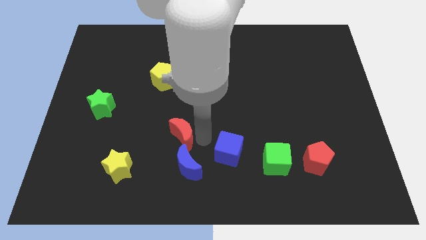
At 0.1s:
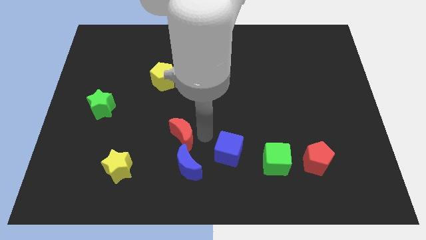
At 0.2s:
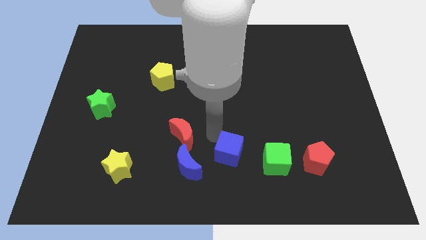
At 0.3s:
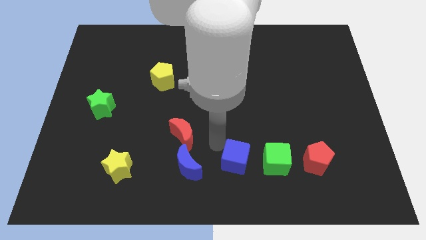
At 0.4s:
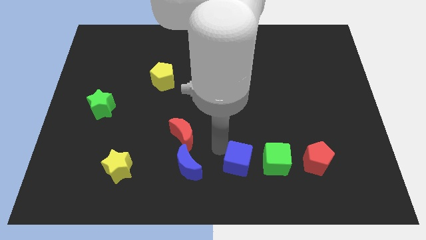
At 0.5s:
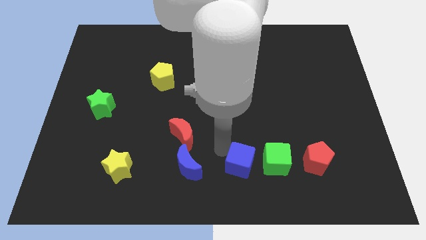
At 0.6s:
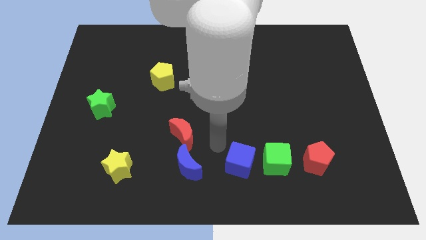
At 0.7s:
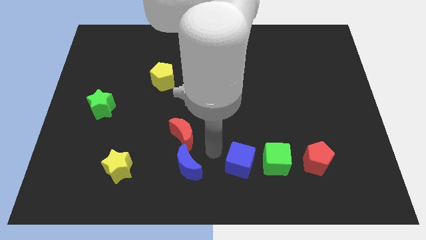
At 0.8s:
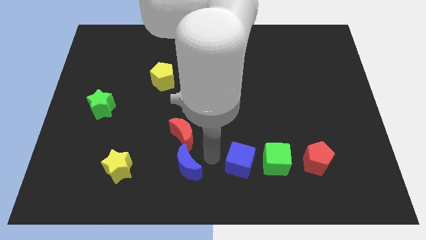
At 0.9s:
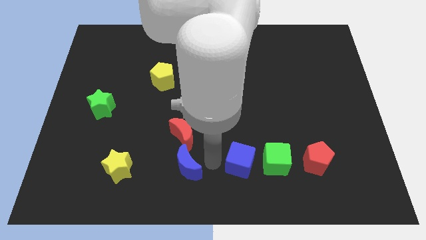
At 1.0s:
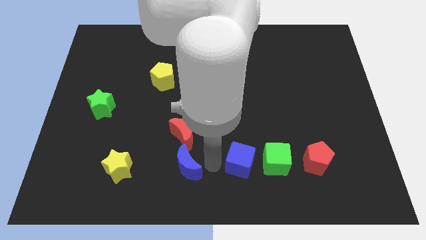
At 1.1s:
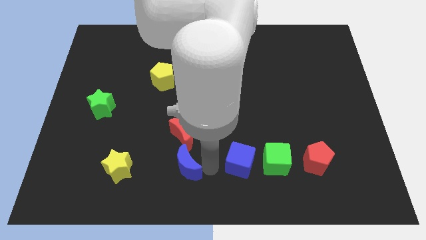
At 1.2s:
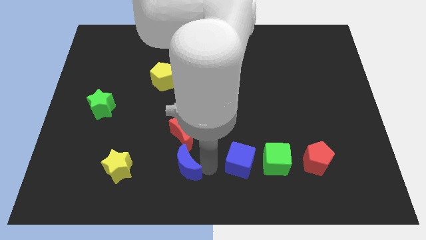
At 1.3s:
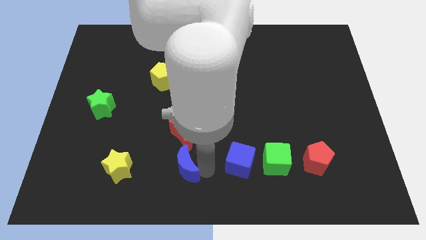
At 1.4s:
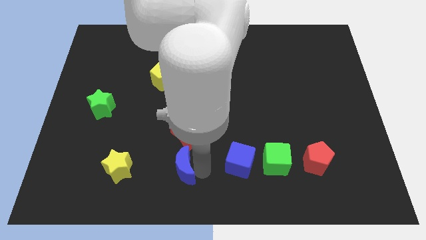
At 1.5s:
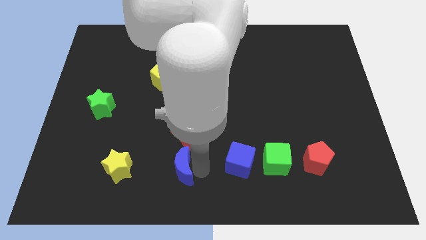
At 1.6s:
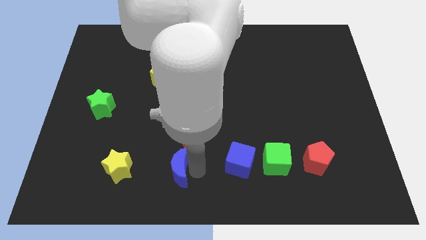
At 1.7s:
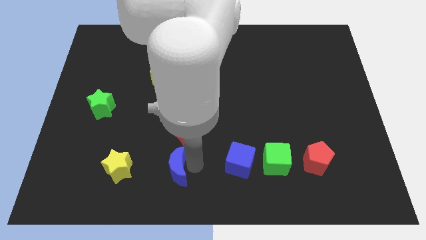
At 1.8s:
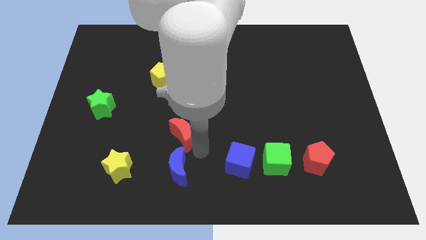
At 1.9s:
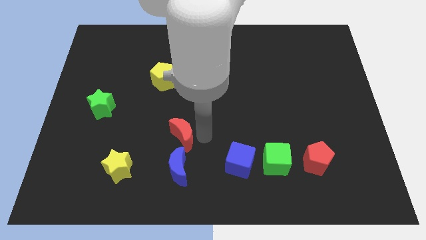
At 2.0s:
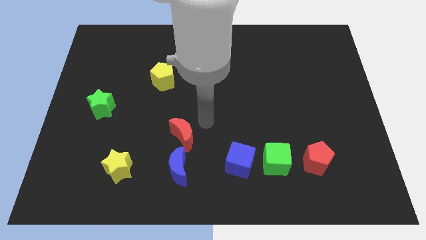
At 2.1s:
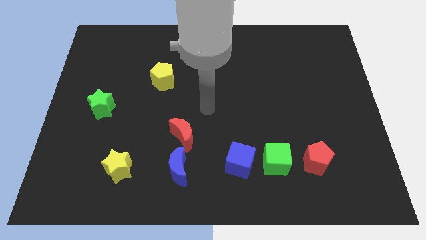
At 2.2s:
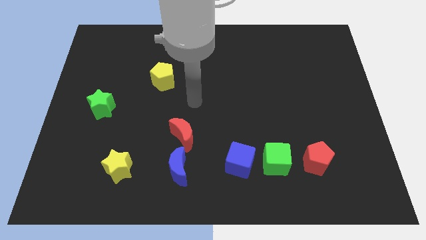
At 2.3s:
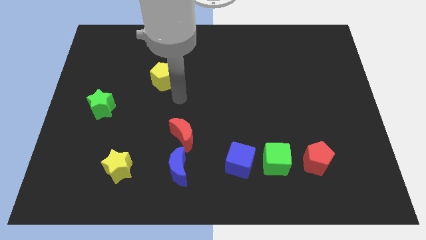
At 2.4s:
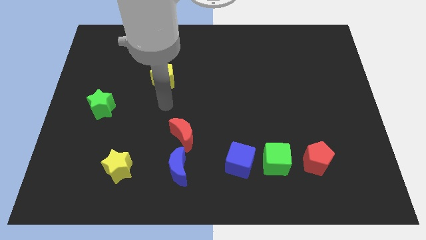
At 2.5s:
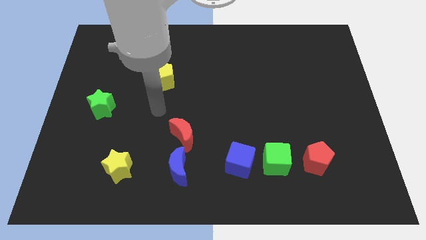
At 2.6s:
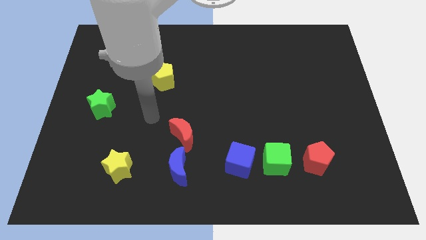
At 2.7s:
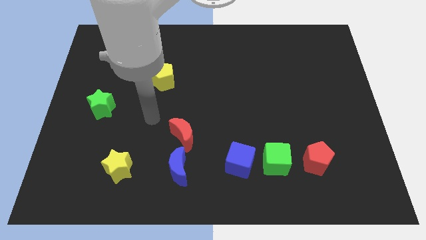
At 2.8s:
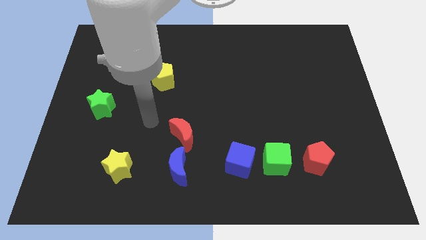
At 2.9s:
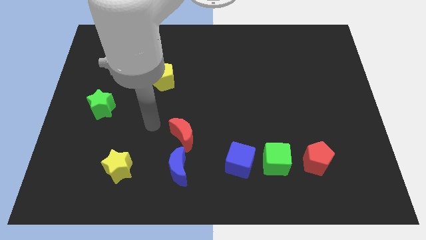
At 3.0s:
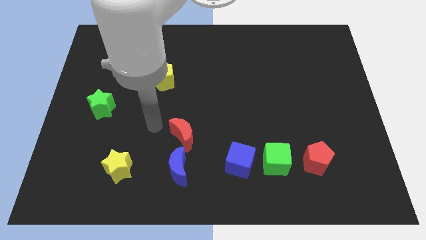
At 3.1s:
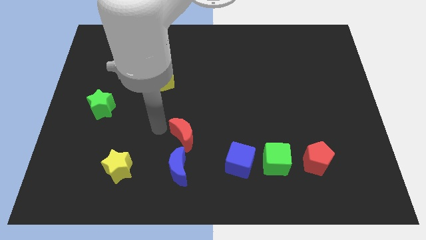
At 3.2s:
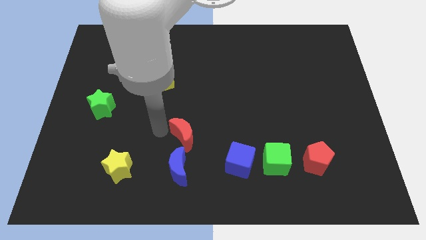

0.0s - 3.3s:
slightly move blue moon towards left

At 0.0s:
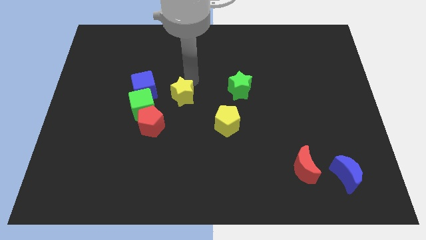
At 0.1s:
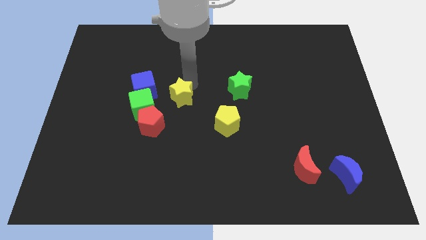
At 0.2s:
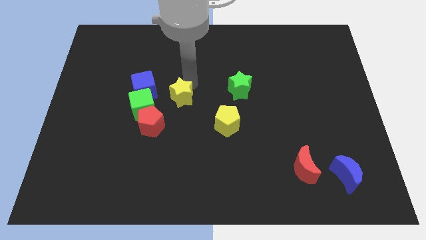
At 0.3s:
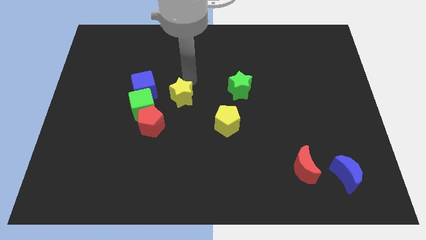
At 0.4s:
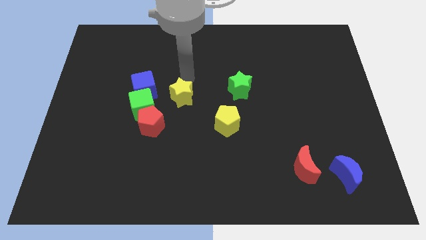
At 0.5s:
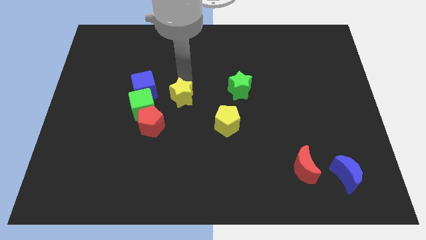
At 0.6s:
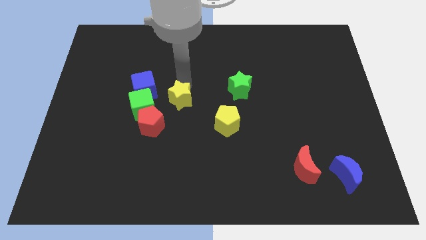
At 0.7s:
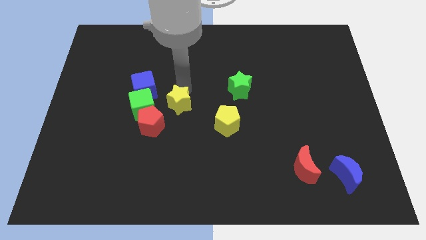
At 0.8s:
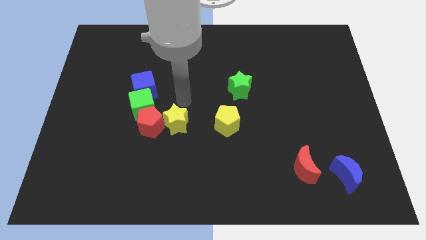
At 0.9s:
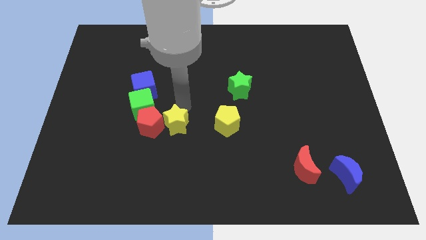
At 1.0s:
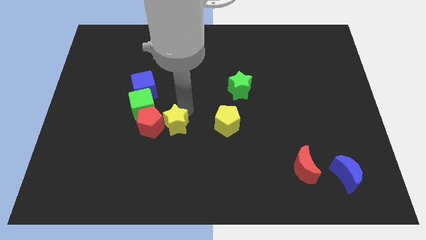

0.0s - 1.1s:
push yellow star into red pentagon

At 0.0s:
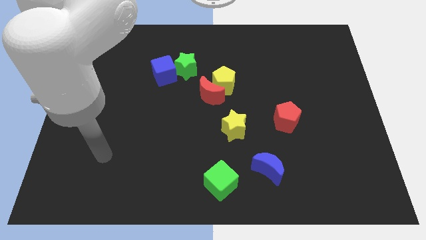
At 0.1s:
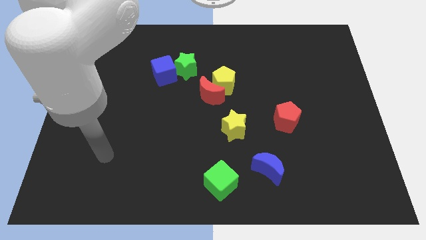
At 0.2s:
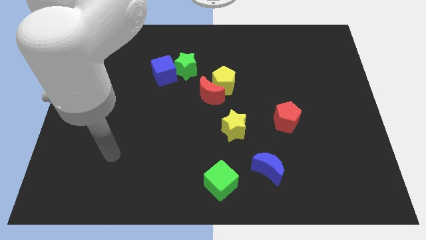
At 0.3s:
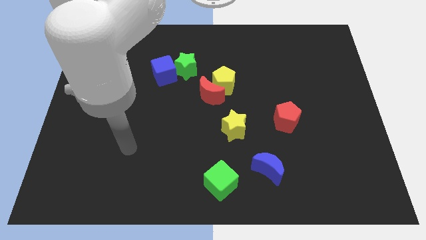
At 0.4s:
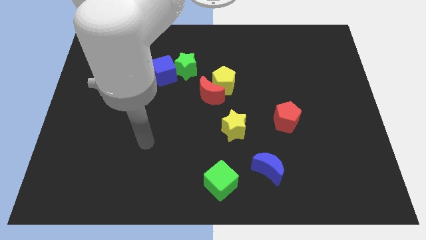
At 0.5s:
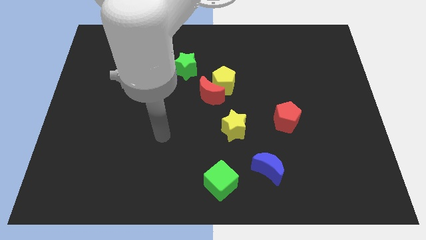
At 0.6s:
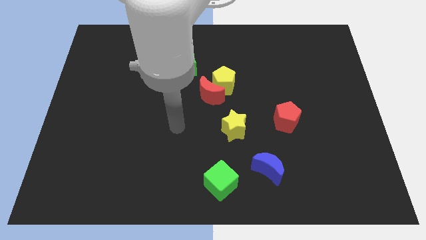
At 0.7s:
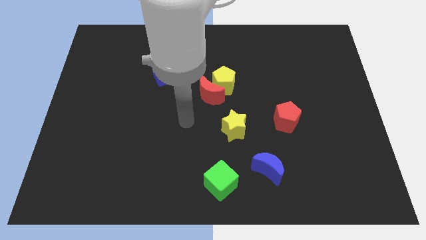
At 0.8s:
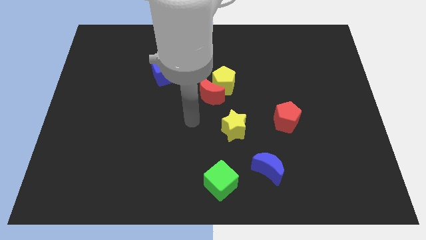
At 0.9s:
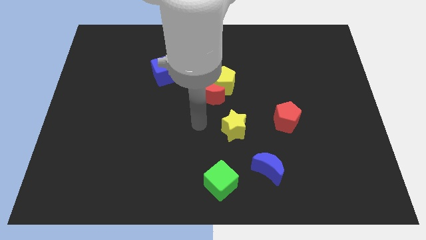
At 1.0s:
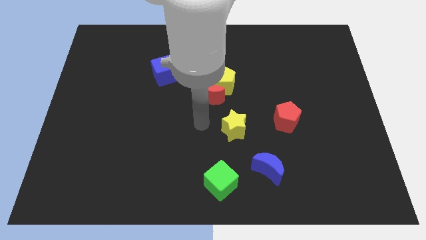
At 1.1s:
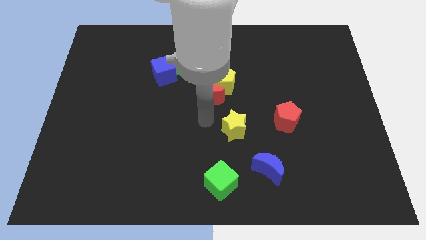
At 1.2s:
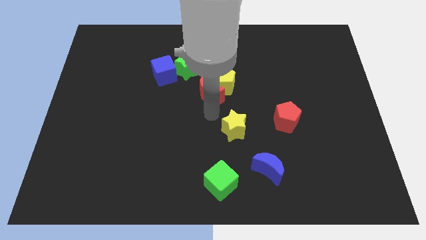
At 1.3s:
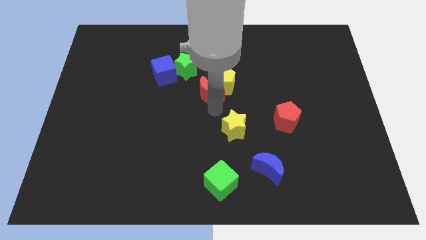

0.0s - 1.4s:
move your arm to the bottom of the red crescent

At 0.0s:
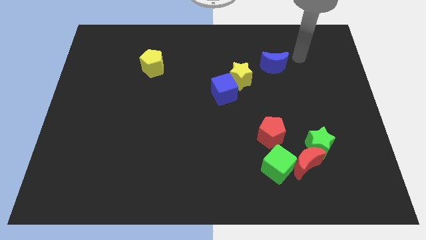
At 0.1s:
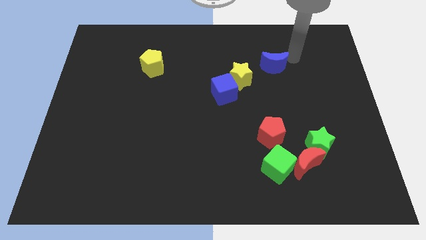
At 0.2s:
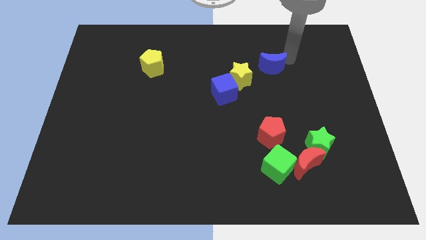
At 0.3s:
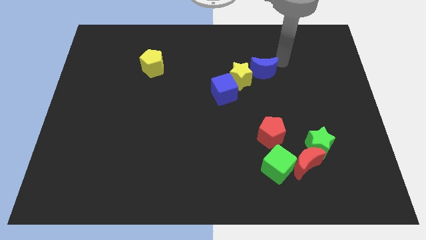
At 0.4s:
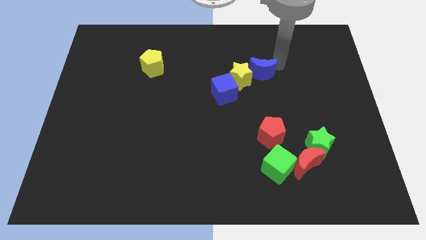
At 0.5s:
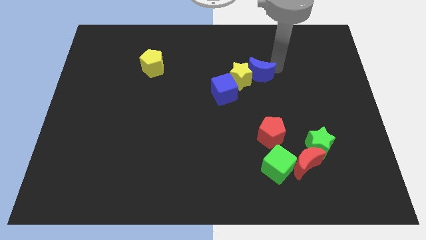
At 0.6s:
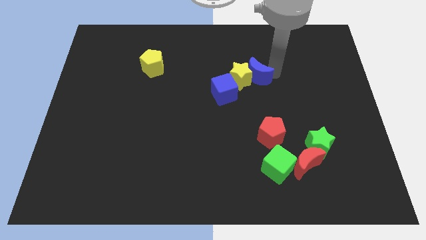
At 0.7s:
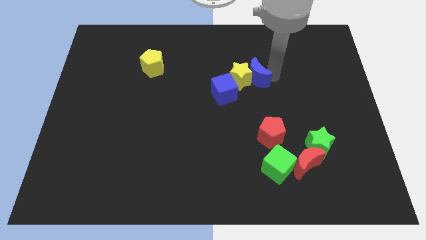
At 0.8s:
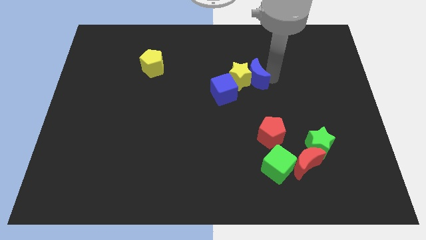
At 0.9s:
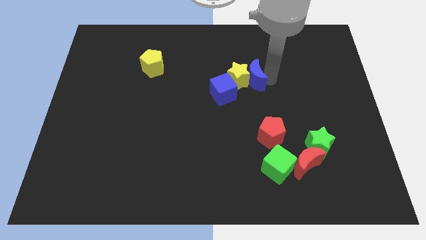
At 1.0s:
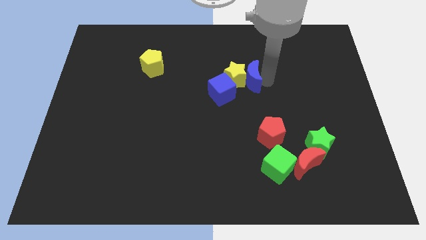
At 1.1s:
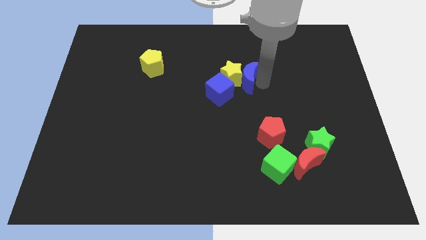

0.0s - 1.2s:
move the blue moon towards the blue cube and yellow star

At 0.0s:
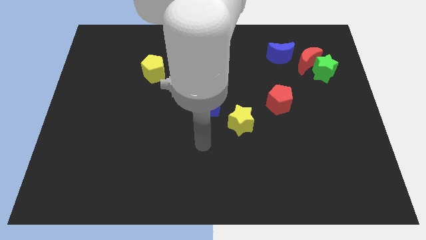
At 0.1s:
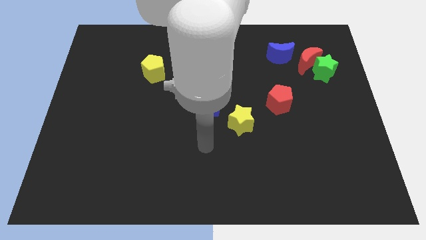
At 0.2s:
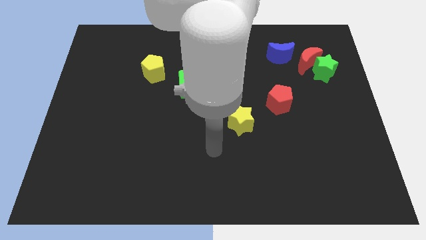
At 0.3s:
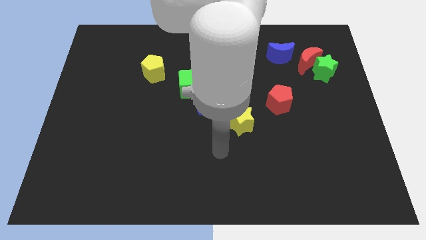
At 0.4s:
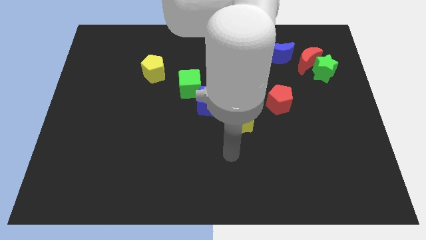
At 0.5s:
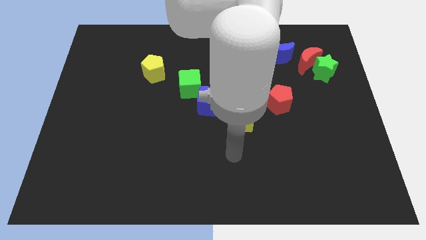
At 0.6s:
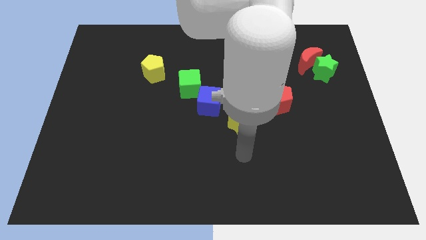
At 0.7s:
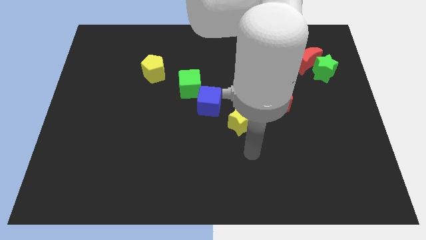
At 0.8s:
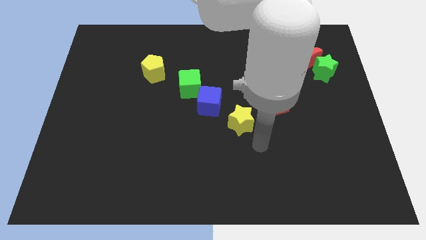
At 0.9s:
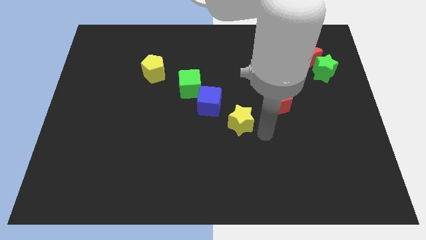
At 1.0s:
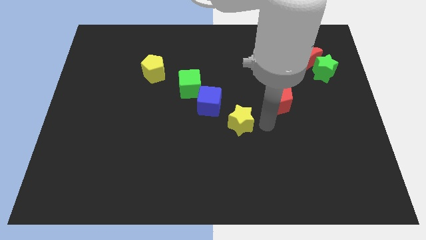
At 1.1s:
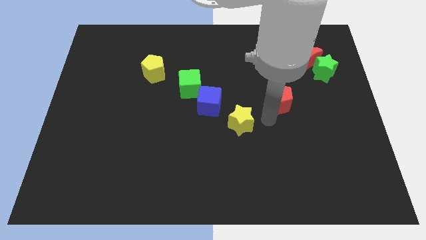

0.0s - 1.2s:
touch the red pentagon

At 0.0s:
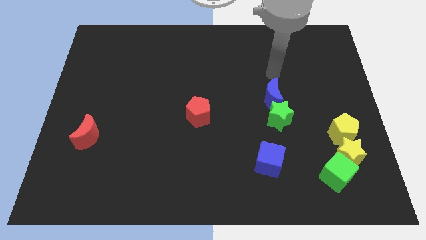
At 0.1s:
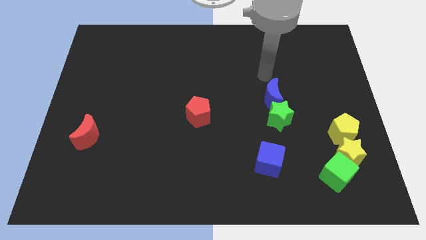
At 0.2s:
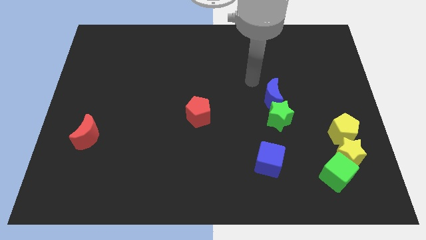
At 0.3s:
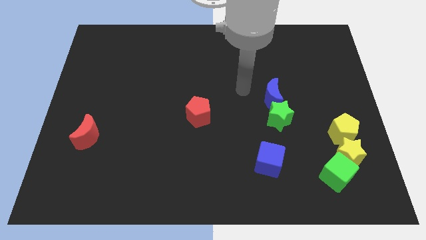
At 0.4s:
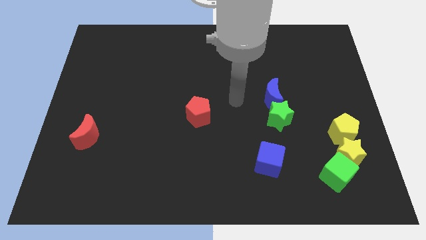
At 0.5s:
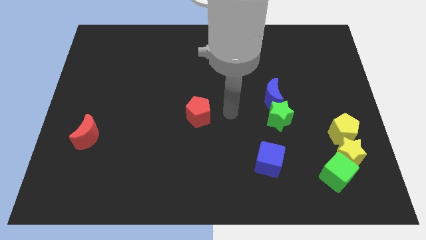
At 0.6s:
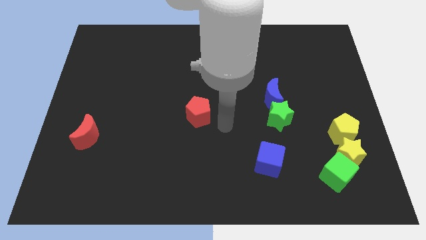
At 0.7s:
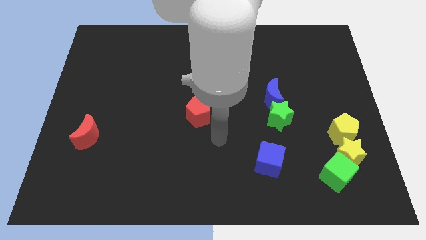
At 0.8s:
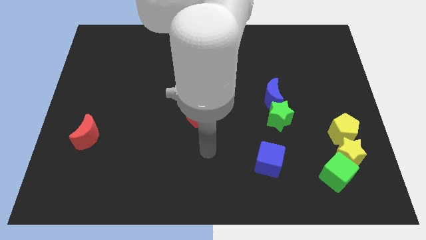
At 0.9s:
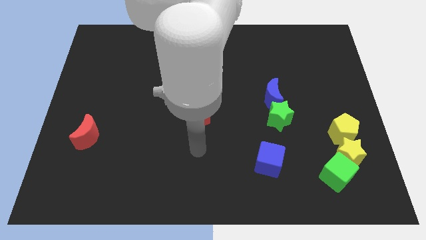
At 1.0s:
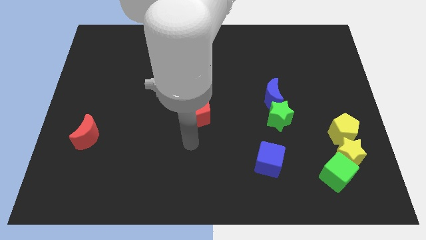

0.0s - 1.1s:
move your arm at the bottom of the red pentagon
